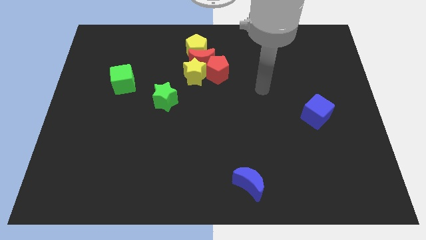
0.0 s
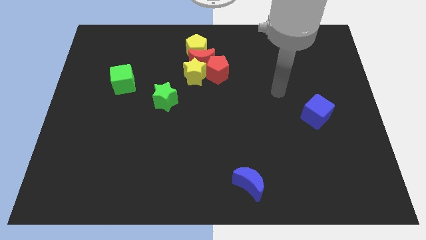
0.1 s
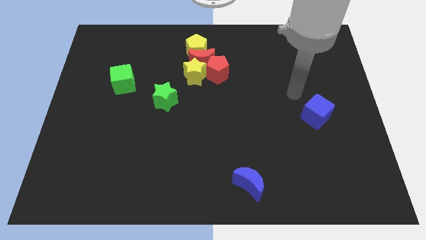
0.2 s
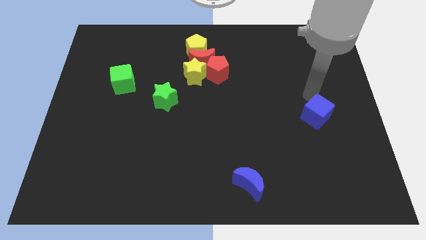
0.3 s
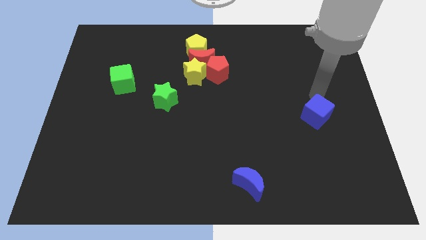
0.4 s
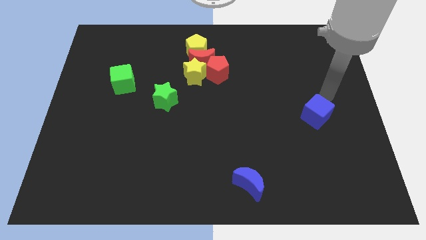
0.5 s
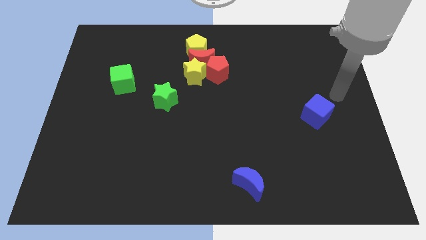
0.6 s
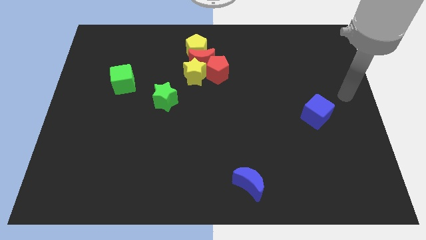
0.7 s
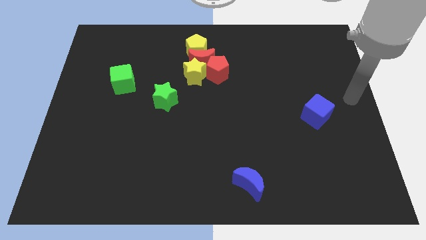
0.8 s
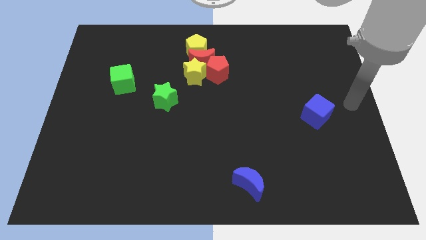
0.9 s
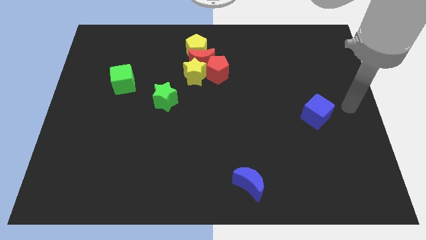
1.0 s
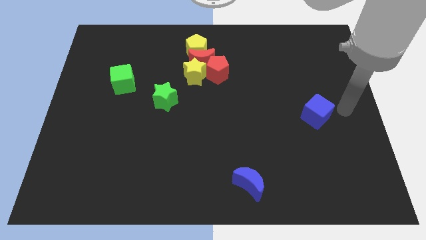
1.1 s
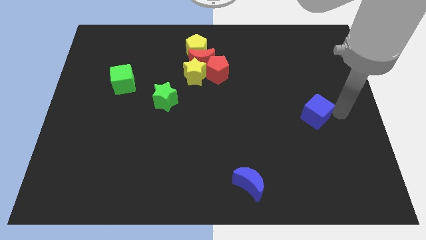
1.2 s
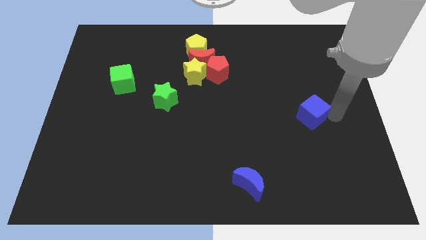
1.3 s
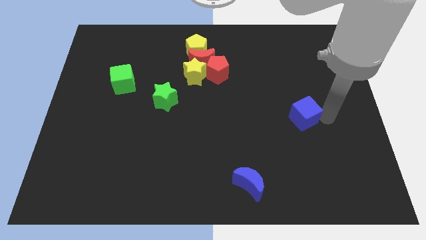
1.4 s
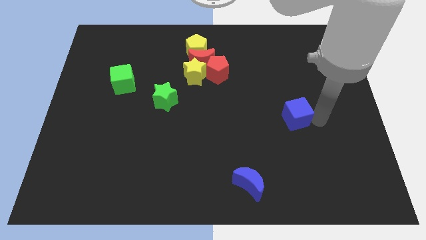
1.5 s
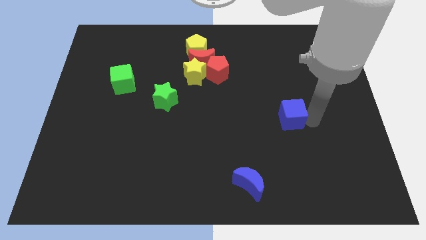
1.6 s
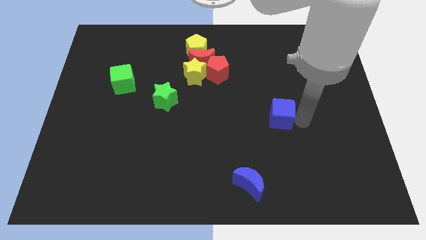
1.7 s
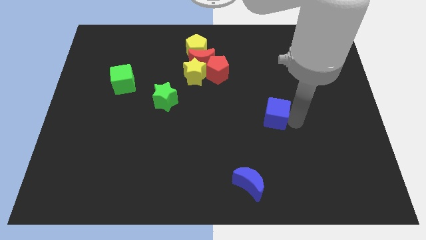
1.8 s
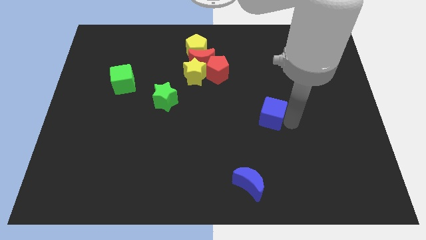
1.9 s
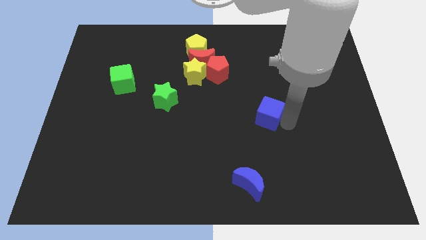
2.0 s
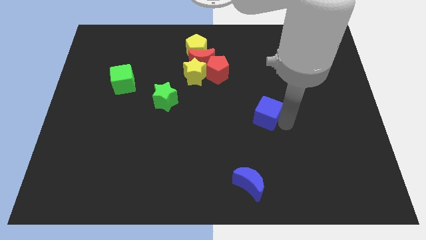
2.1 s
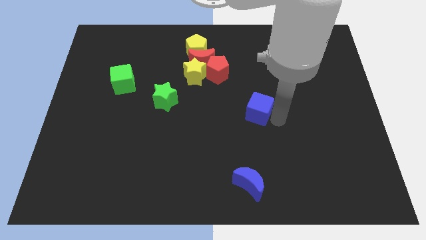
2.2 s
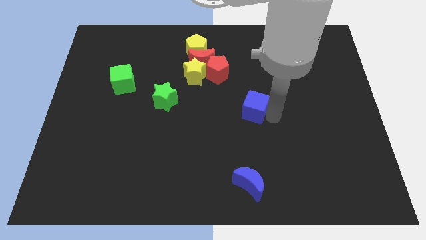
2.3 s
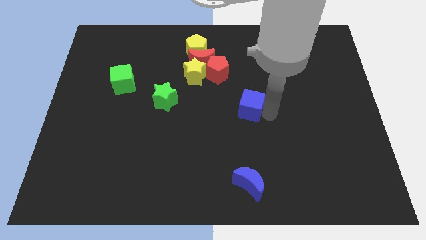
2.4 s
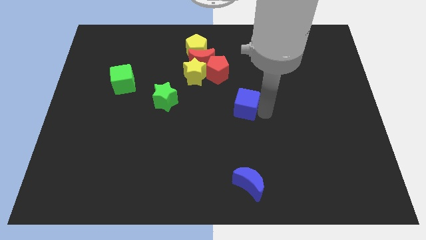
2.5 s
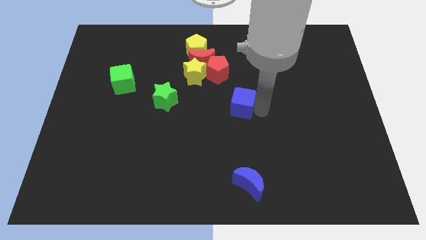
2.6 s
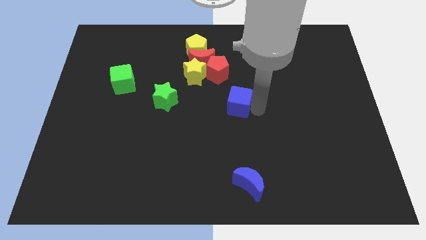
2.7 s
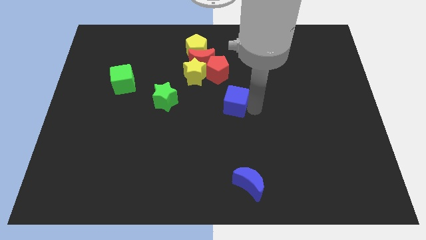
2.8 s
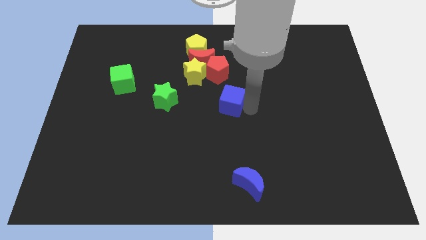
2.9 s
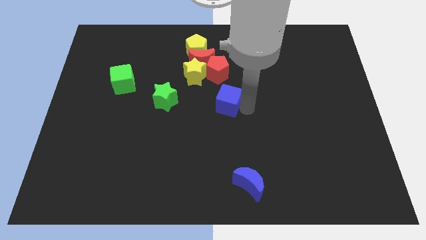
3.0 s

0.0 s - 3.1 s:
place the blue cube parallel to the blue crescent

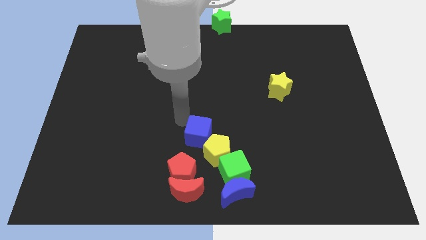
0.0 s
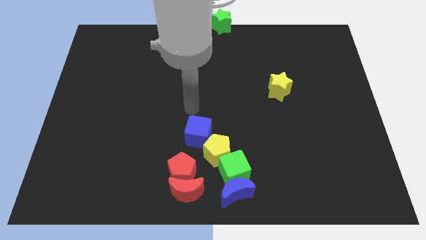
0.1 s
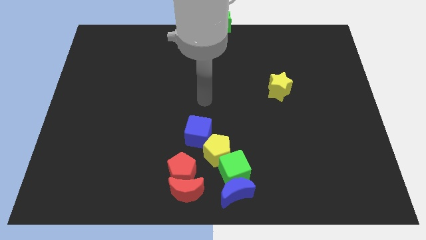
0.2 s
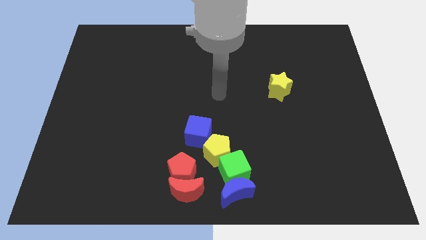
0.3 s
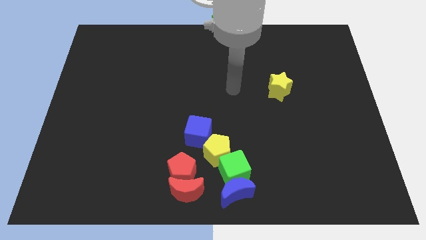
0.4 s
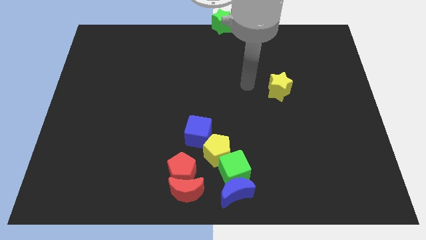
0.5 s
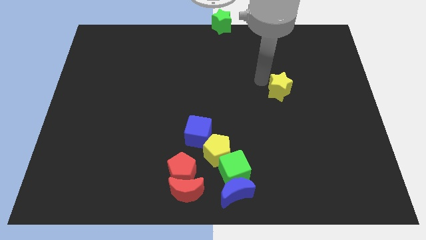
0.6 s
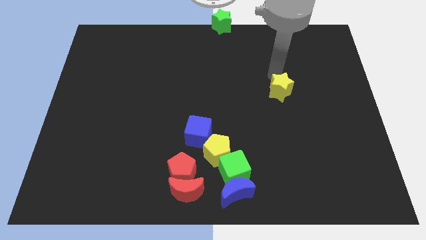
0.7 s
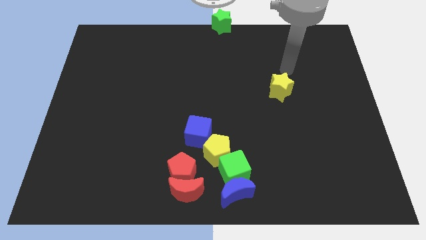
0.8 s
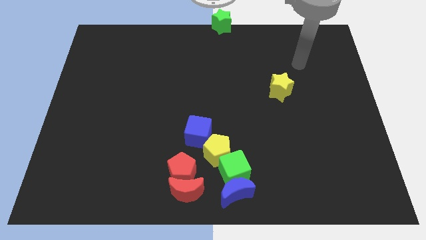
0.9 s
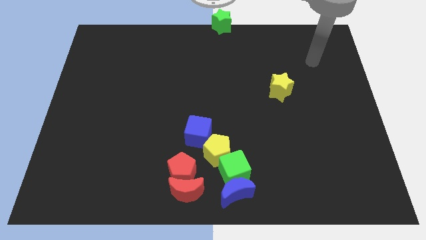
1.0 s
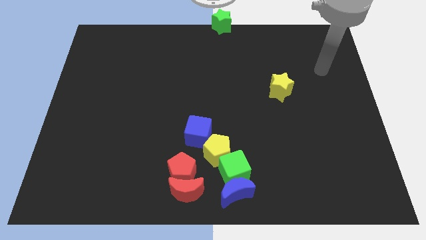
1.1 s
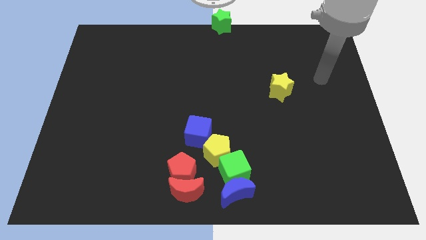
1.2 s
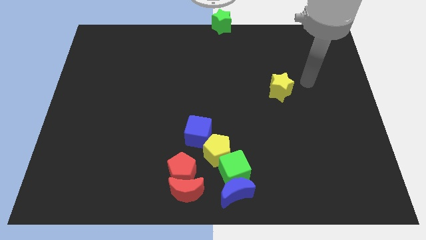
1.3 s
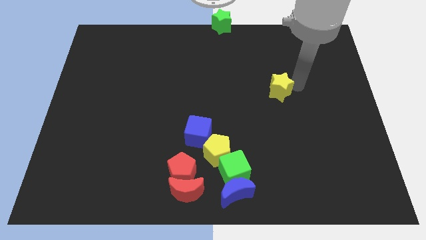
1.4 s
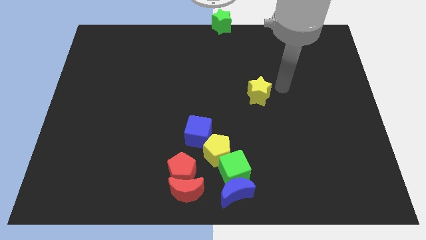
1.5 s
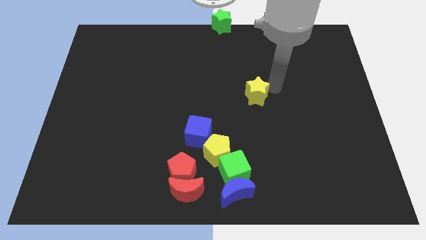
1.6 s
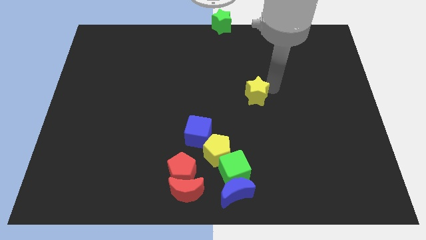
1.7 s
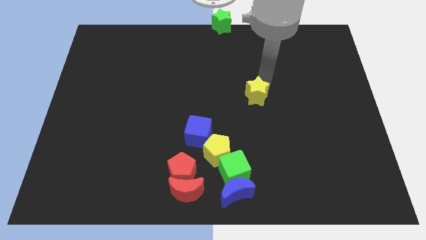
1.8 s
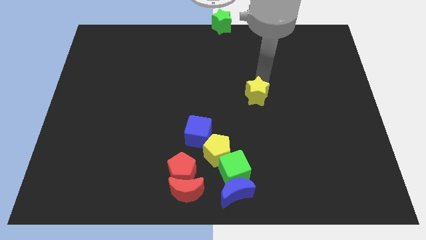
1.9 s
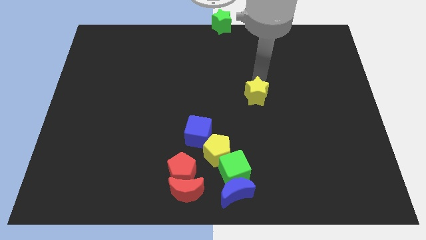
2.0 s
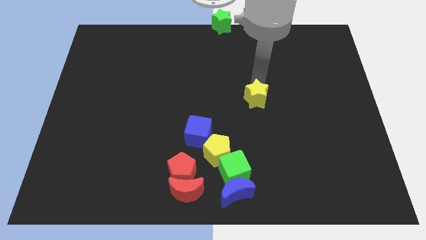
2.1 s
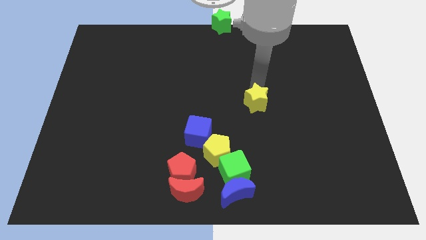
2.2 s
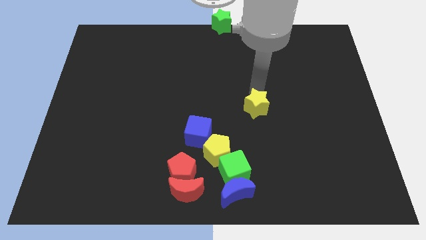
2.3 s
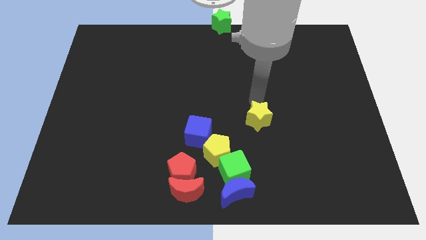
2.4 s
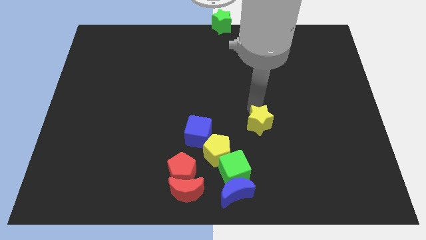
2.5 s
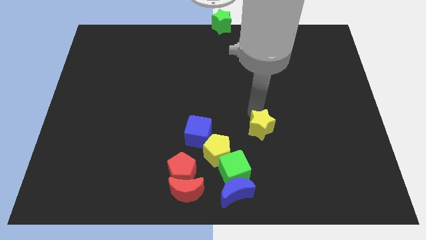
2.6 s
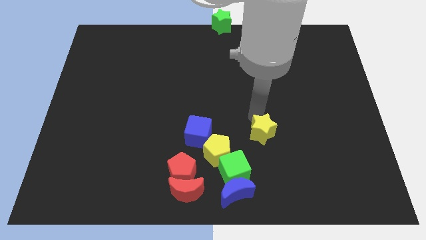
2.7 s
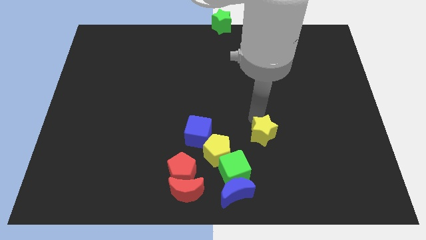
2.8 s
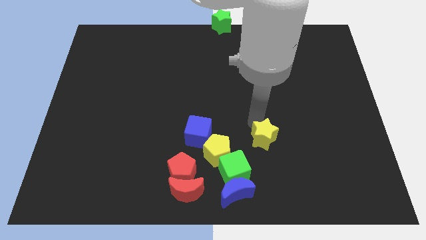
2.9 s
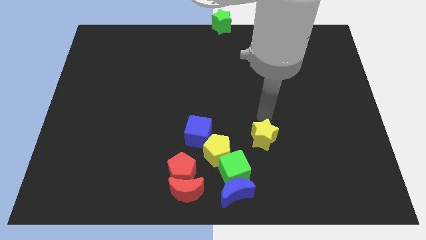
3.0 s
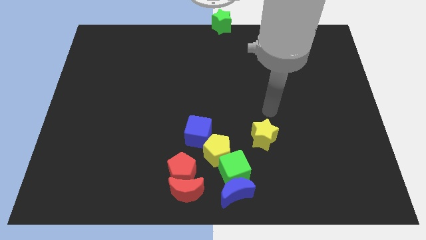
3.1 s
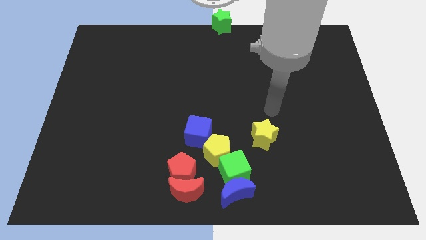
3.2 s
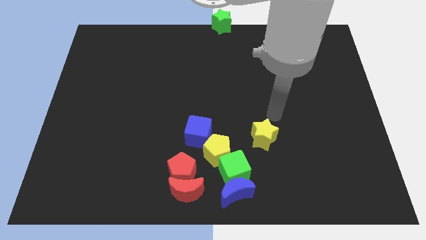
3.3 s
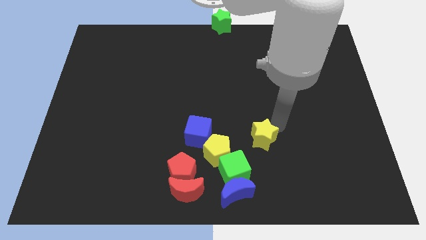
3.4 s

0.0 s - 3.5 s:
place the yellow star to the right of the blue cube

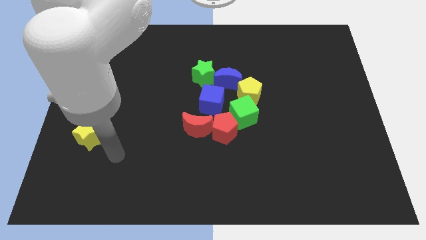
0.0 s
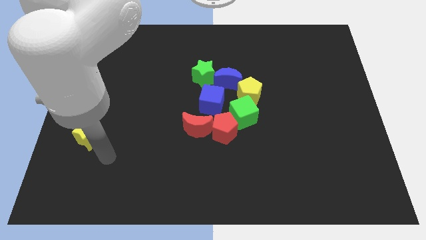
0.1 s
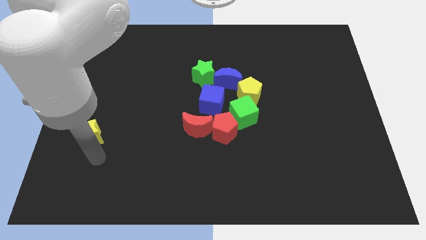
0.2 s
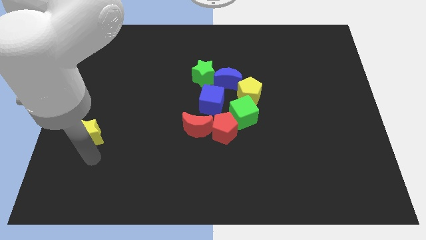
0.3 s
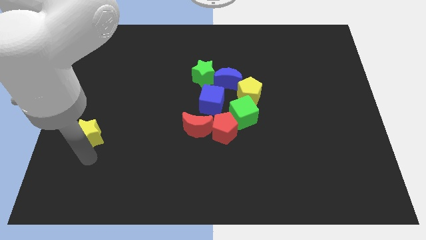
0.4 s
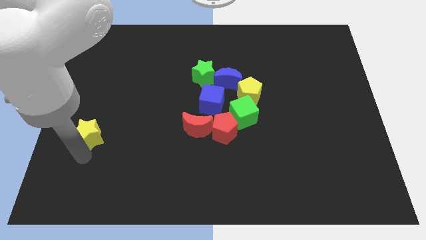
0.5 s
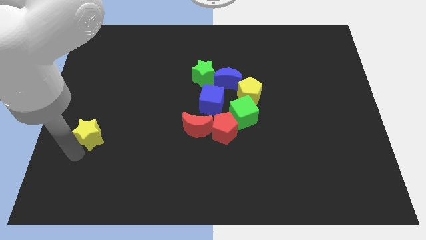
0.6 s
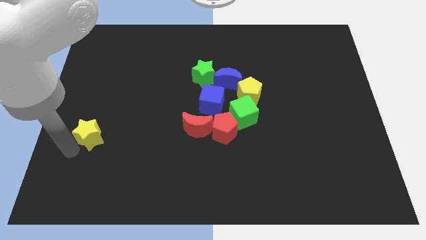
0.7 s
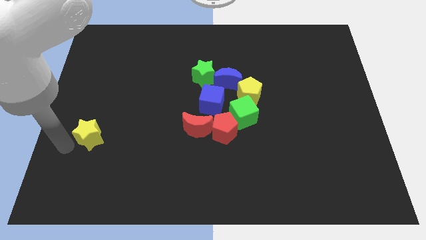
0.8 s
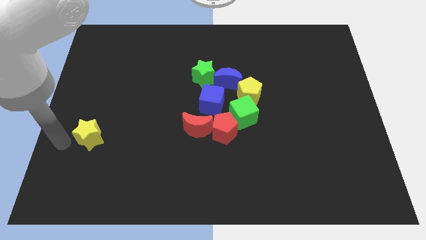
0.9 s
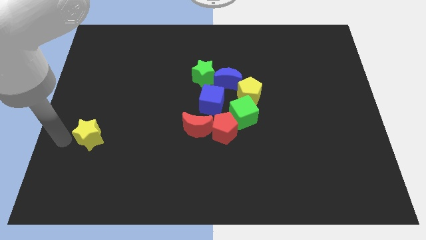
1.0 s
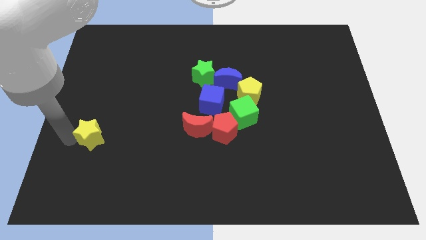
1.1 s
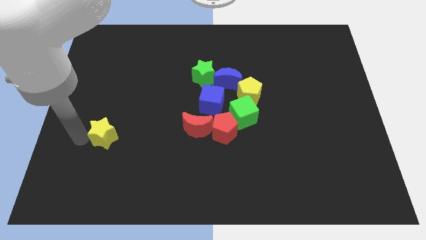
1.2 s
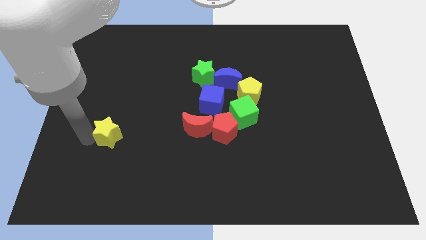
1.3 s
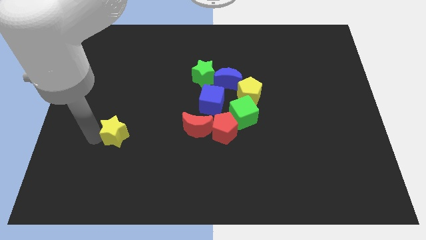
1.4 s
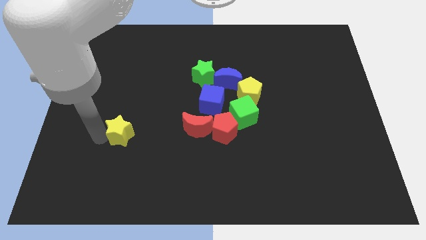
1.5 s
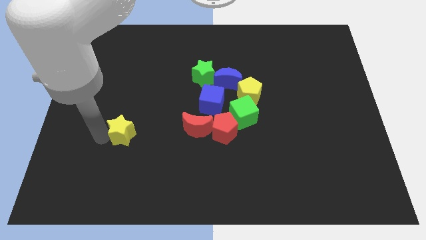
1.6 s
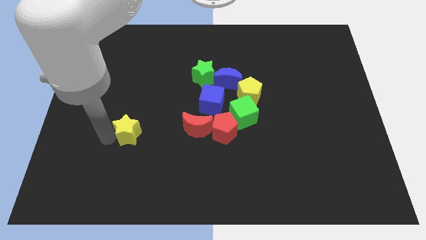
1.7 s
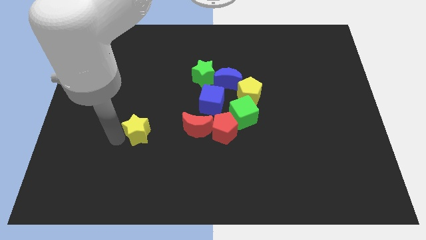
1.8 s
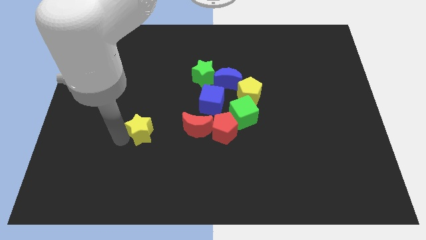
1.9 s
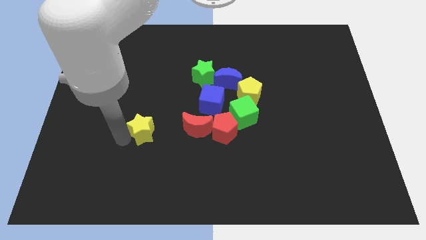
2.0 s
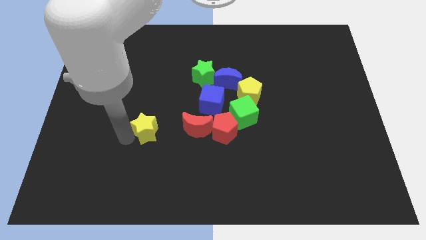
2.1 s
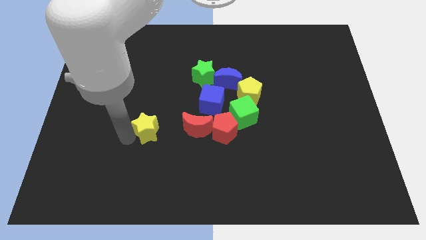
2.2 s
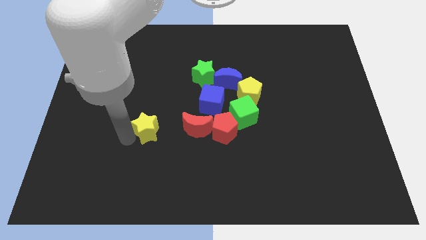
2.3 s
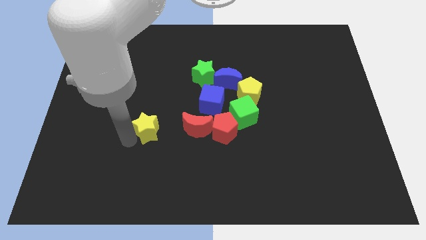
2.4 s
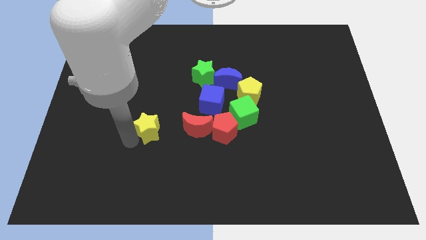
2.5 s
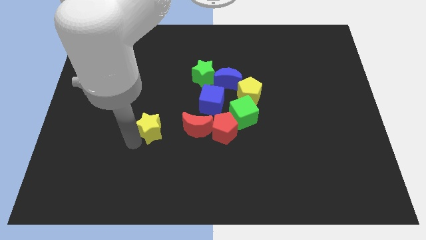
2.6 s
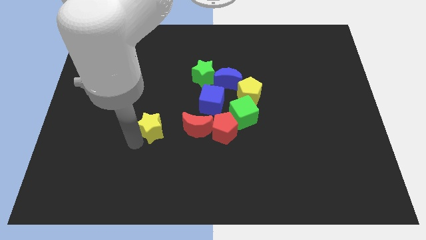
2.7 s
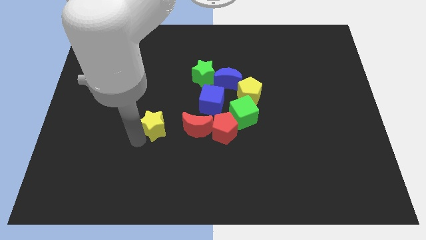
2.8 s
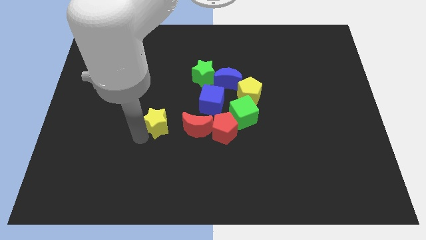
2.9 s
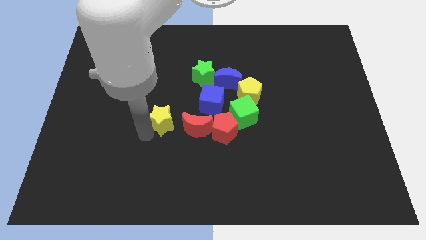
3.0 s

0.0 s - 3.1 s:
push the yellow star towards the red moon
